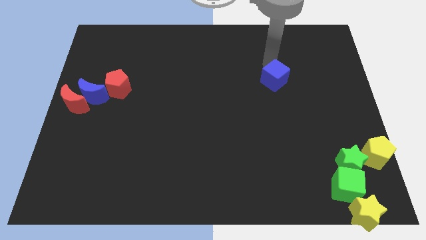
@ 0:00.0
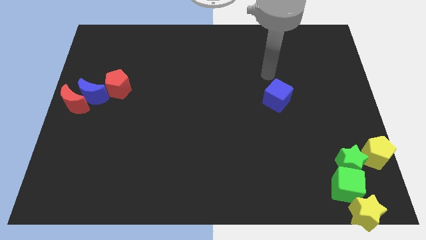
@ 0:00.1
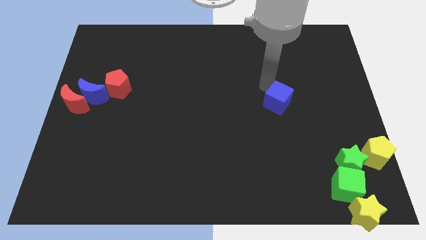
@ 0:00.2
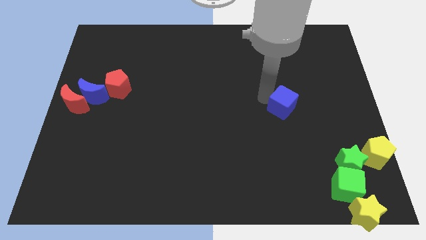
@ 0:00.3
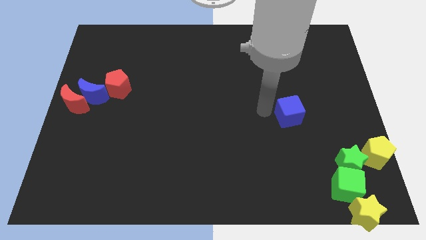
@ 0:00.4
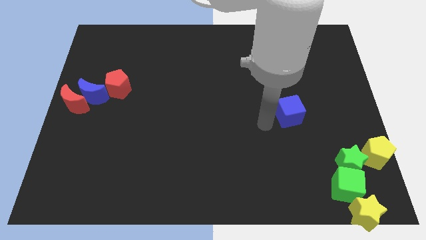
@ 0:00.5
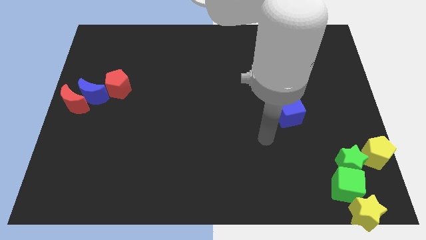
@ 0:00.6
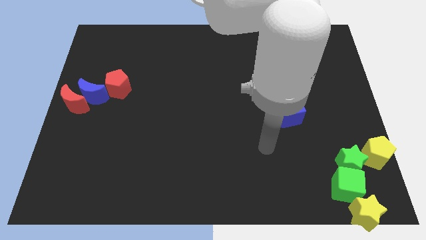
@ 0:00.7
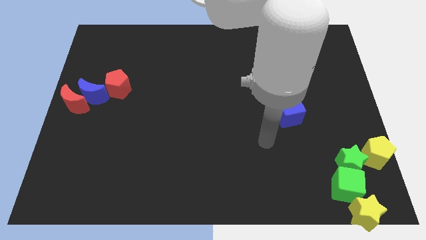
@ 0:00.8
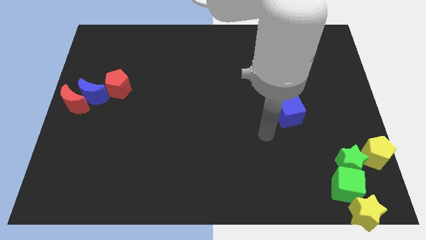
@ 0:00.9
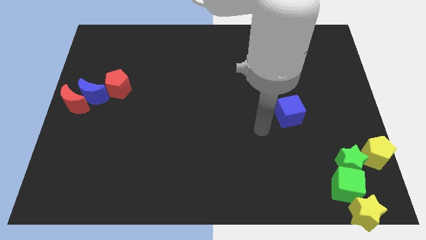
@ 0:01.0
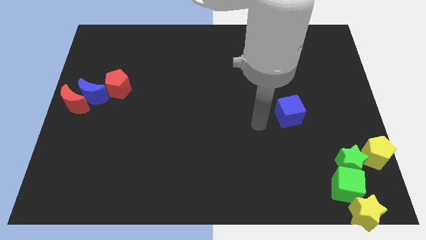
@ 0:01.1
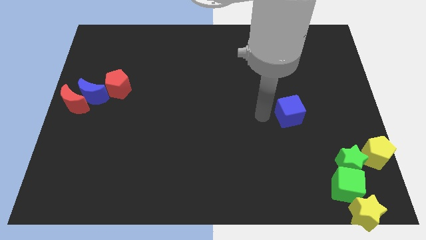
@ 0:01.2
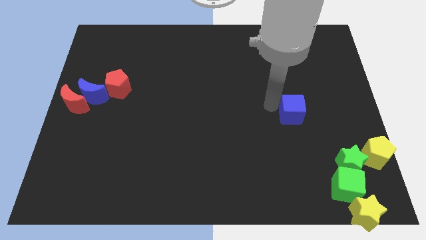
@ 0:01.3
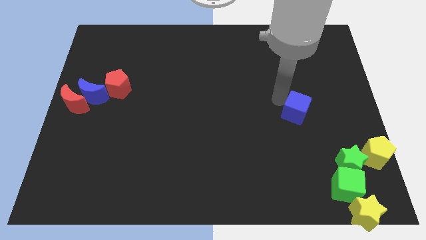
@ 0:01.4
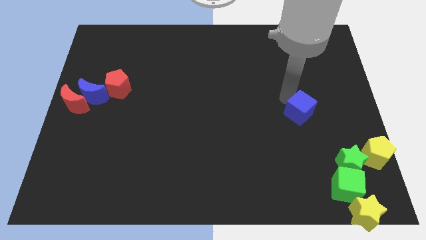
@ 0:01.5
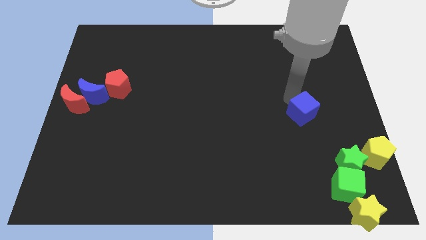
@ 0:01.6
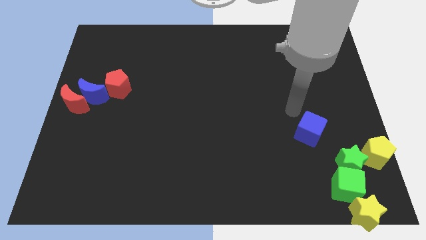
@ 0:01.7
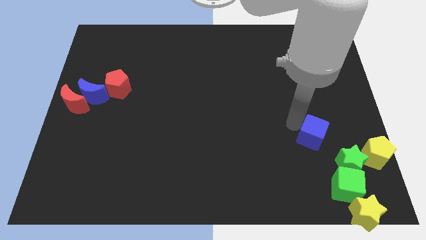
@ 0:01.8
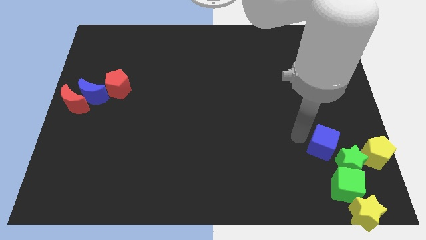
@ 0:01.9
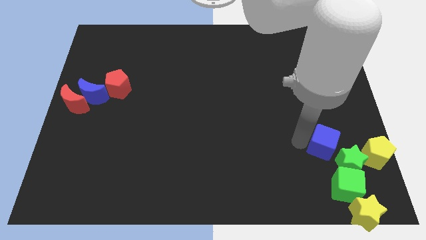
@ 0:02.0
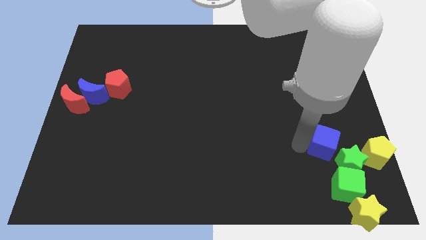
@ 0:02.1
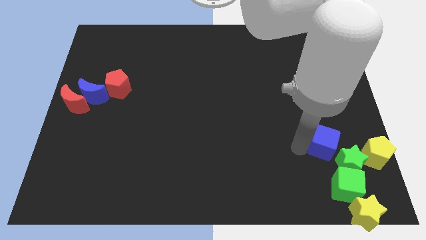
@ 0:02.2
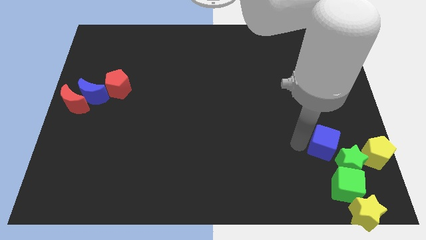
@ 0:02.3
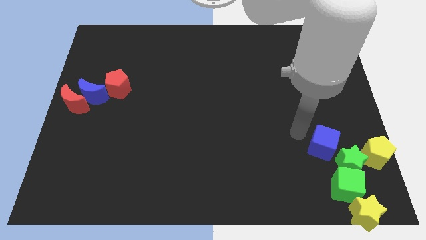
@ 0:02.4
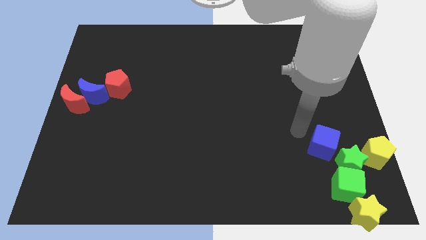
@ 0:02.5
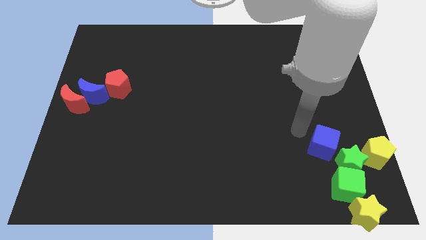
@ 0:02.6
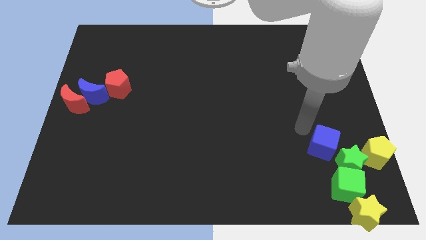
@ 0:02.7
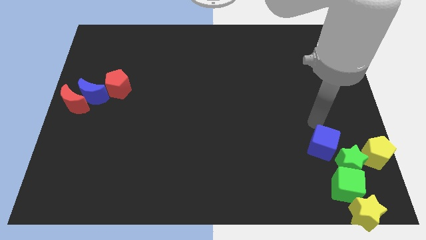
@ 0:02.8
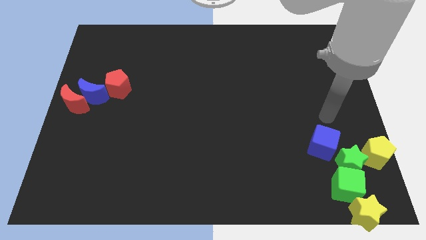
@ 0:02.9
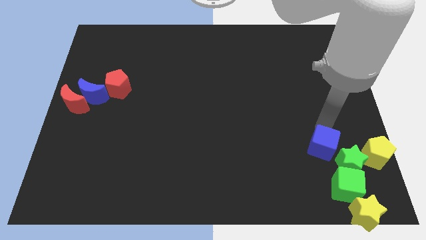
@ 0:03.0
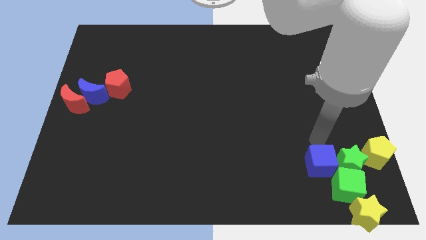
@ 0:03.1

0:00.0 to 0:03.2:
place the blue cube left to the green star

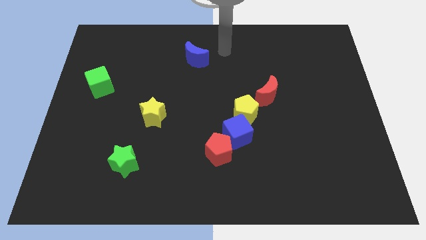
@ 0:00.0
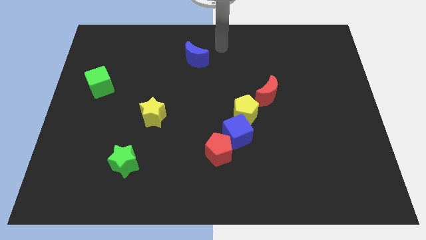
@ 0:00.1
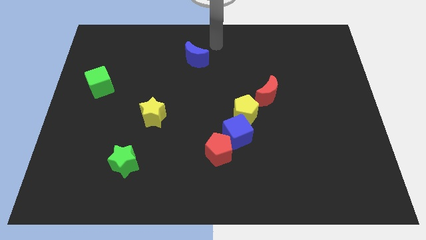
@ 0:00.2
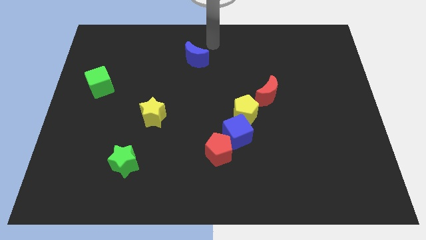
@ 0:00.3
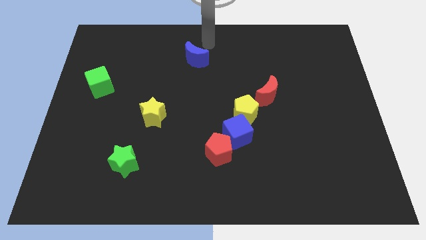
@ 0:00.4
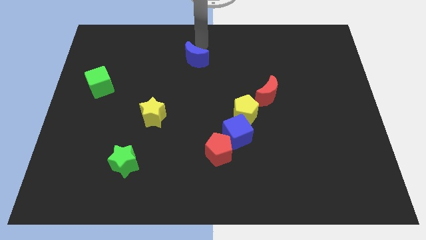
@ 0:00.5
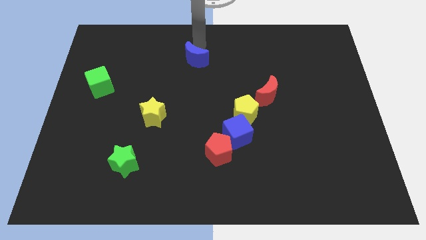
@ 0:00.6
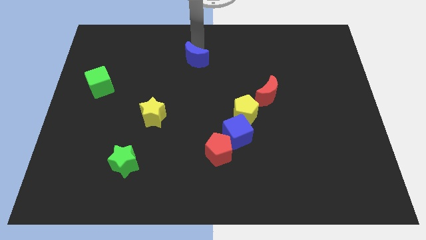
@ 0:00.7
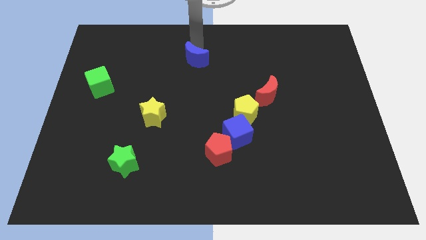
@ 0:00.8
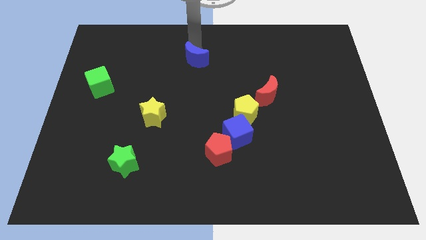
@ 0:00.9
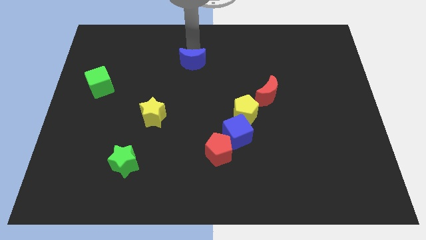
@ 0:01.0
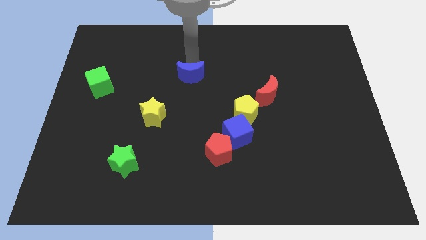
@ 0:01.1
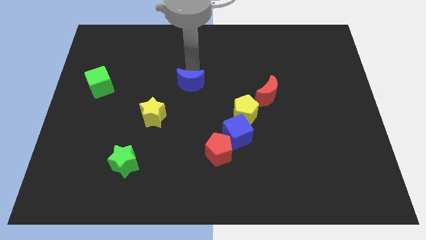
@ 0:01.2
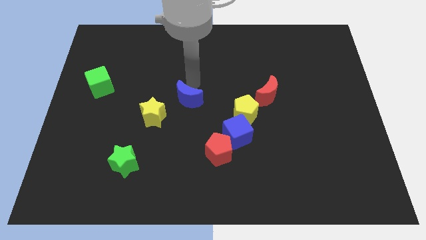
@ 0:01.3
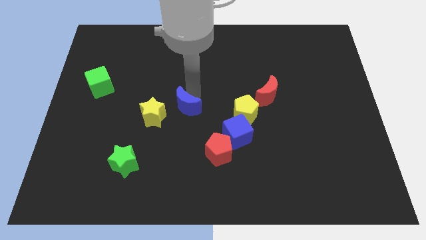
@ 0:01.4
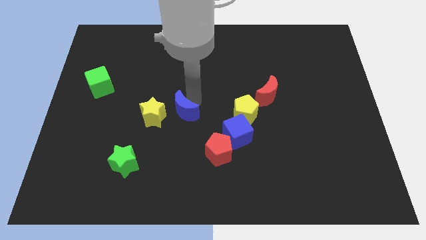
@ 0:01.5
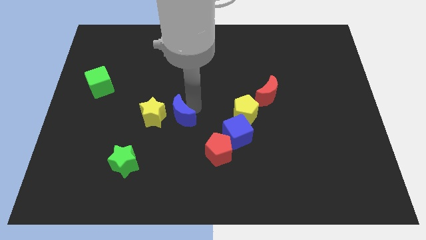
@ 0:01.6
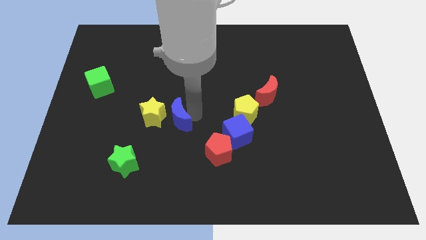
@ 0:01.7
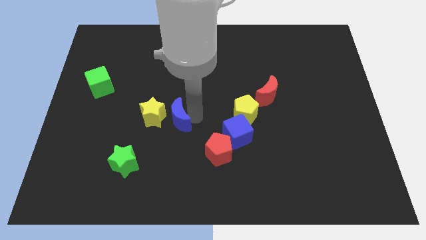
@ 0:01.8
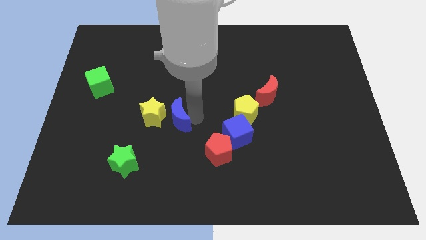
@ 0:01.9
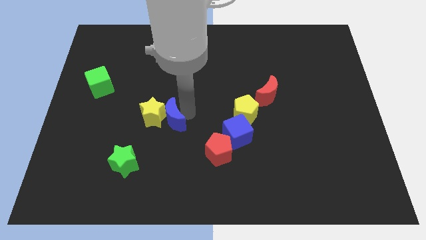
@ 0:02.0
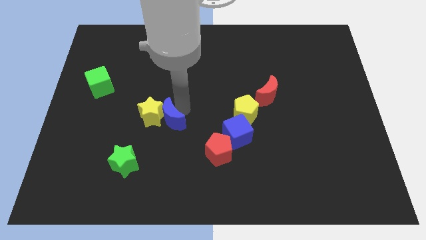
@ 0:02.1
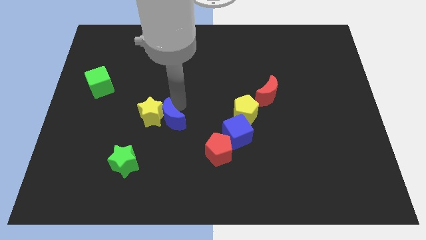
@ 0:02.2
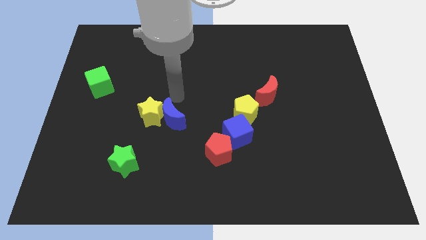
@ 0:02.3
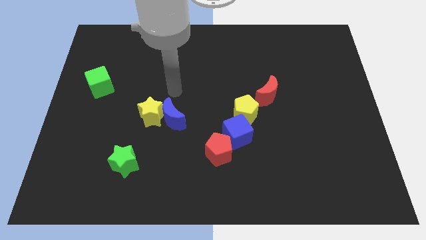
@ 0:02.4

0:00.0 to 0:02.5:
push the blue moon into the yellow star

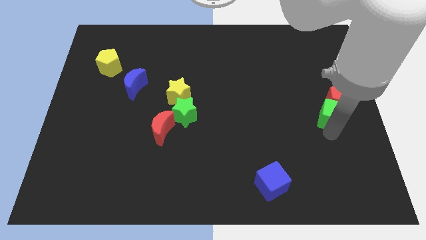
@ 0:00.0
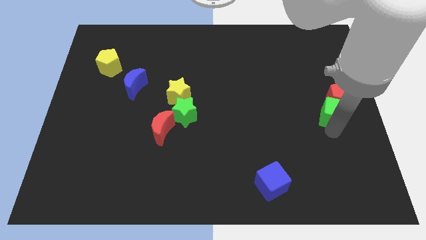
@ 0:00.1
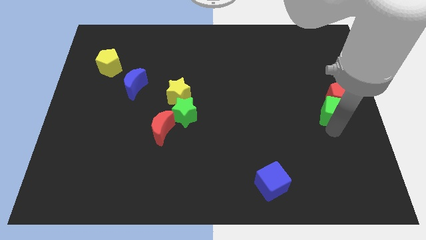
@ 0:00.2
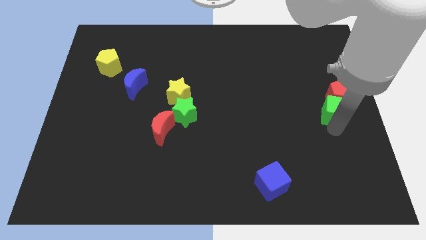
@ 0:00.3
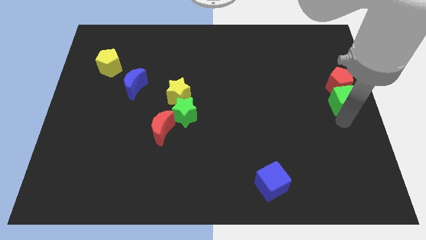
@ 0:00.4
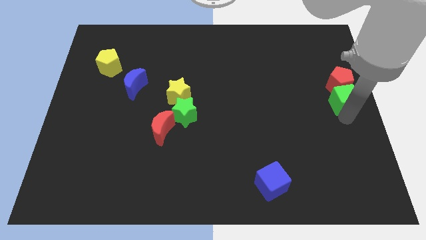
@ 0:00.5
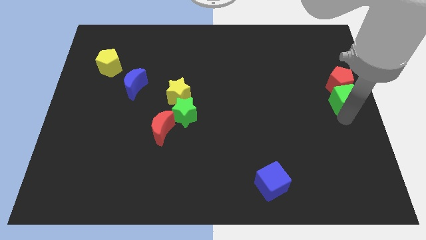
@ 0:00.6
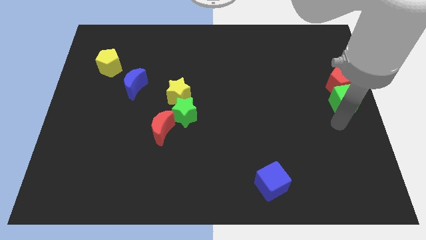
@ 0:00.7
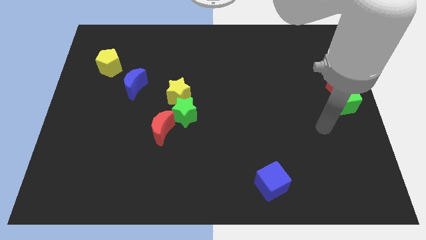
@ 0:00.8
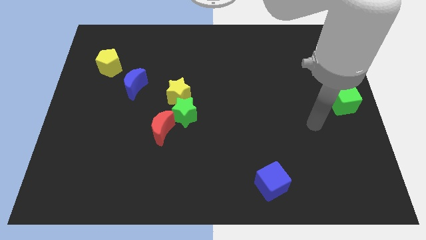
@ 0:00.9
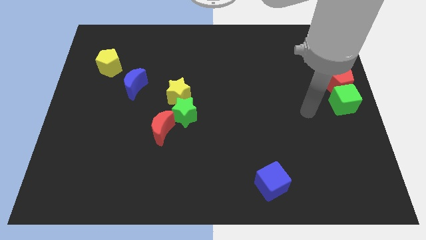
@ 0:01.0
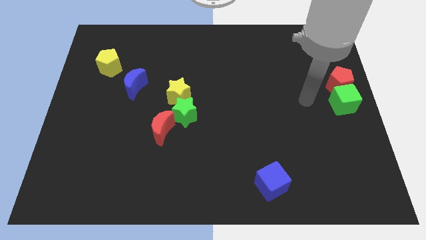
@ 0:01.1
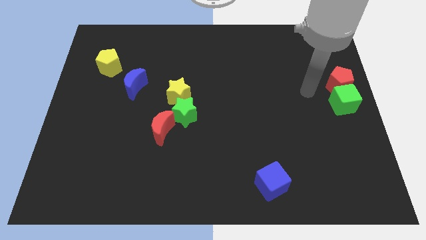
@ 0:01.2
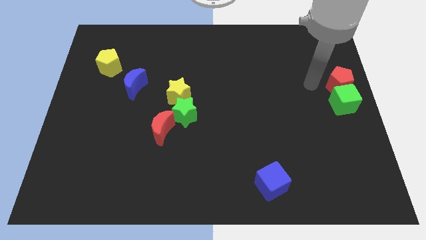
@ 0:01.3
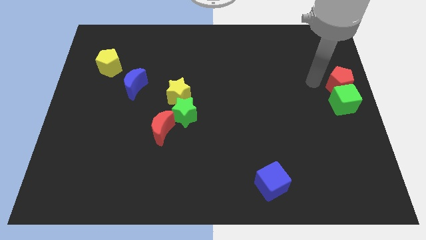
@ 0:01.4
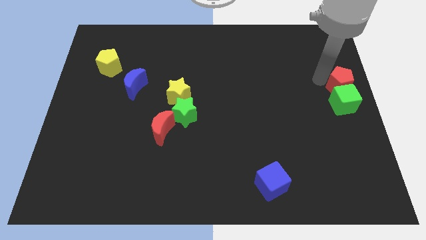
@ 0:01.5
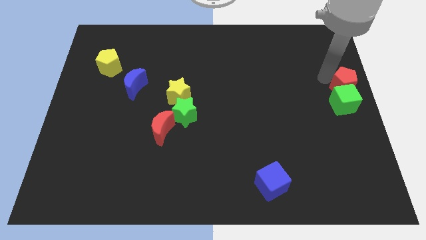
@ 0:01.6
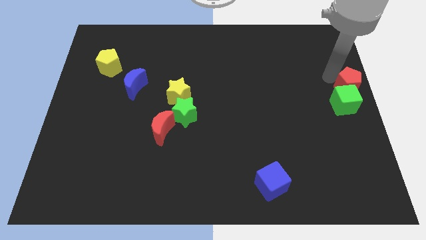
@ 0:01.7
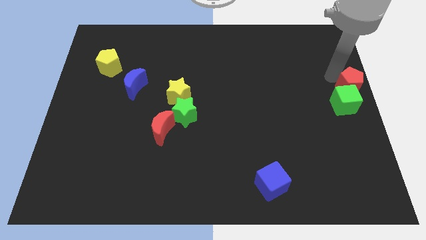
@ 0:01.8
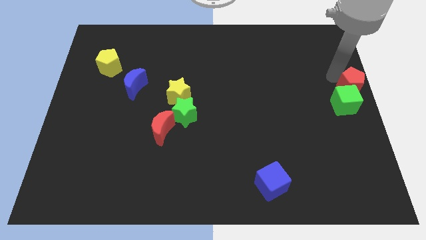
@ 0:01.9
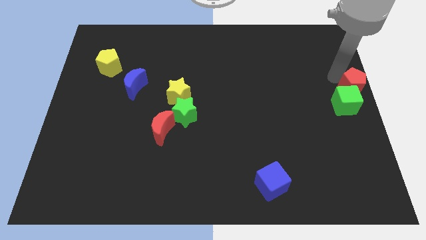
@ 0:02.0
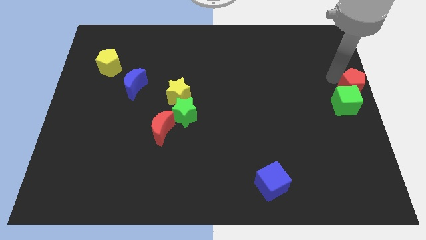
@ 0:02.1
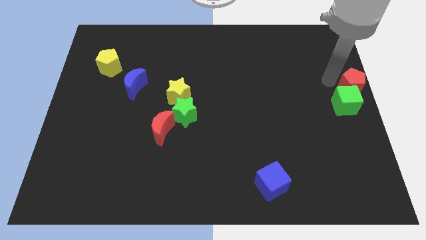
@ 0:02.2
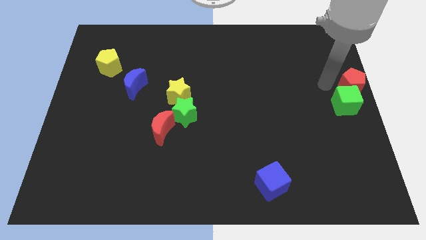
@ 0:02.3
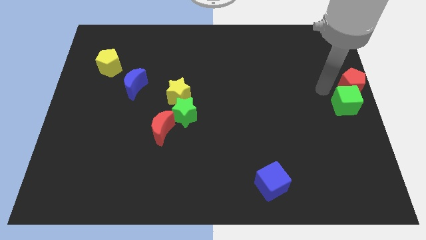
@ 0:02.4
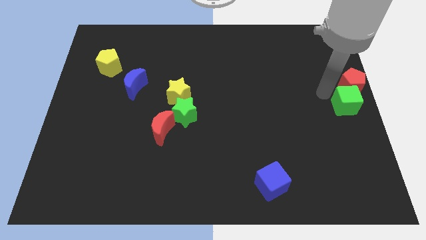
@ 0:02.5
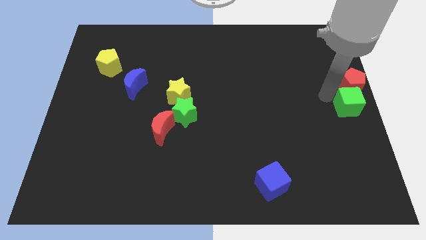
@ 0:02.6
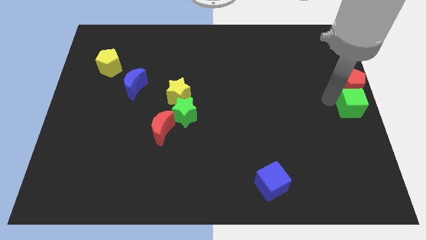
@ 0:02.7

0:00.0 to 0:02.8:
move the red pentagon and green cube to the right center of the board

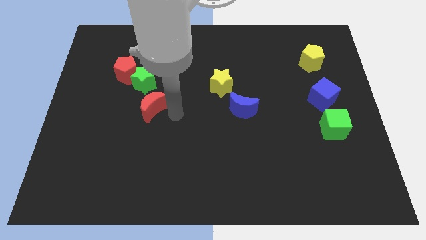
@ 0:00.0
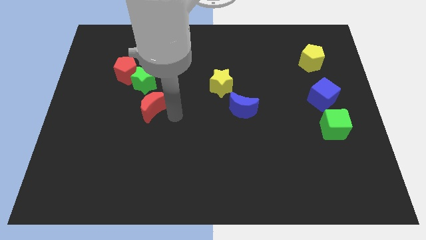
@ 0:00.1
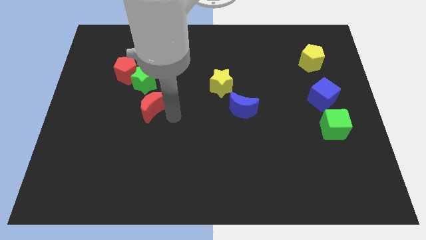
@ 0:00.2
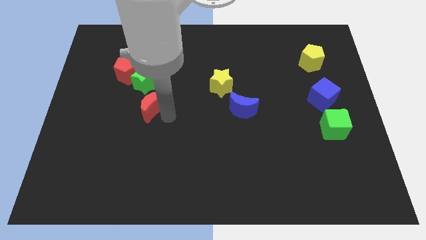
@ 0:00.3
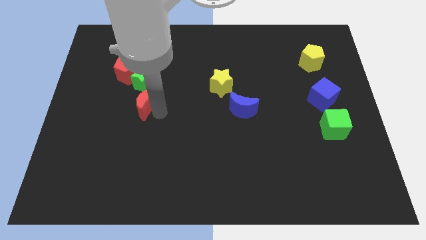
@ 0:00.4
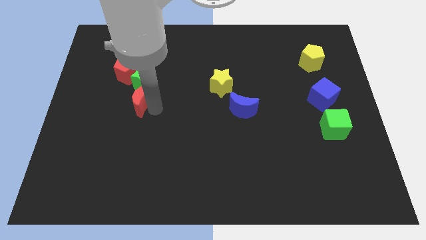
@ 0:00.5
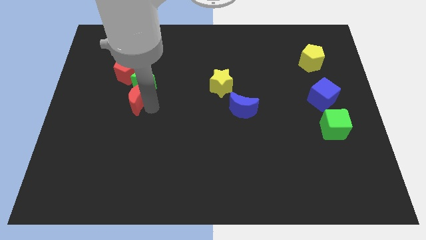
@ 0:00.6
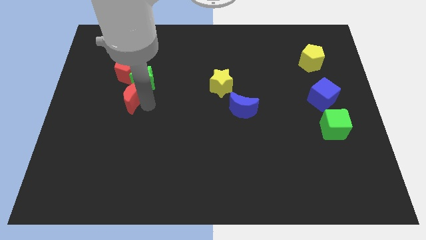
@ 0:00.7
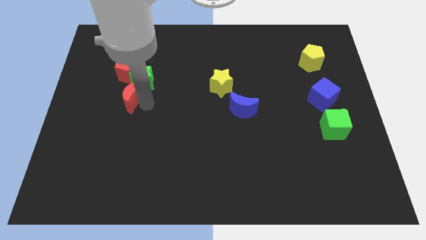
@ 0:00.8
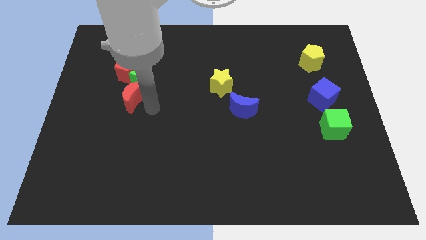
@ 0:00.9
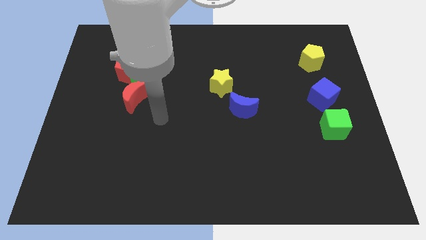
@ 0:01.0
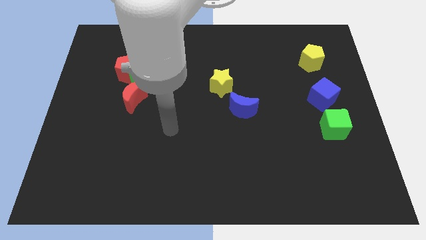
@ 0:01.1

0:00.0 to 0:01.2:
move the red crescent to the left bottom side of the green star
